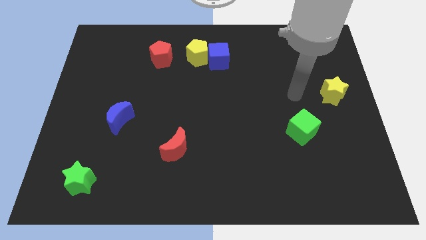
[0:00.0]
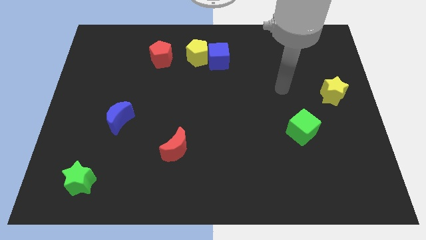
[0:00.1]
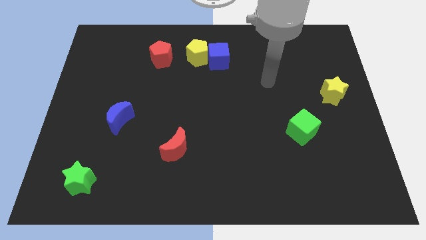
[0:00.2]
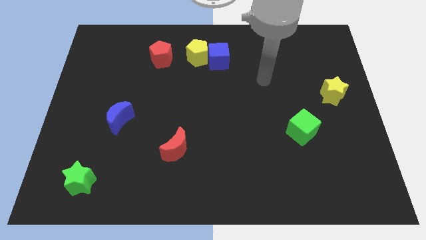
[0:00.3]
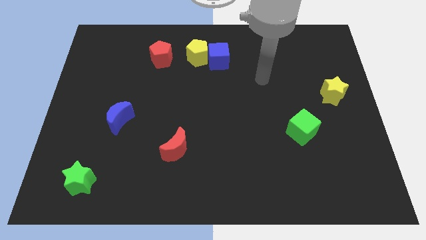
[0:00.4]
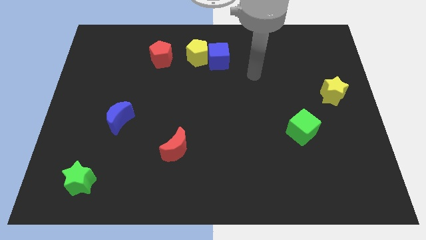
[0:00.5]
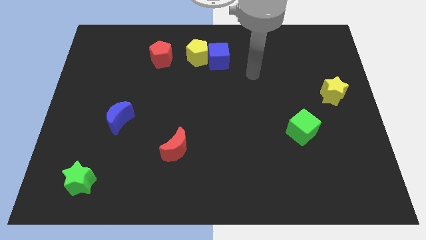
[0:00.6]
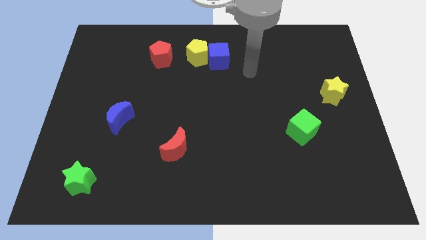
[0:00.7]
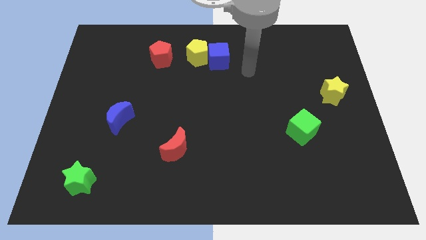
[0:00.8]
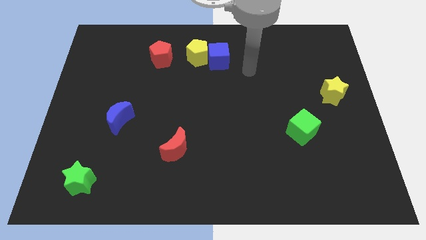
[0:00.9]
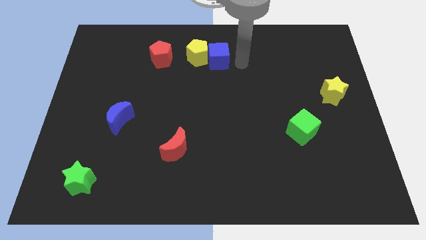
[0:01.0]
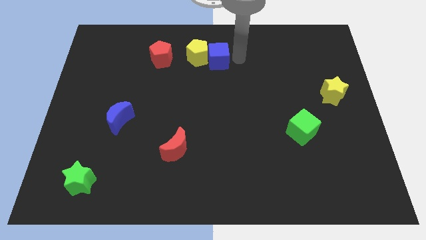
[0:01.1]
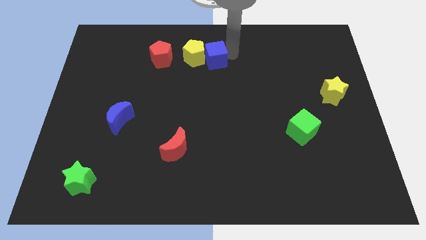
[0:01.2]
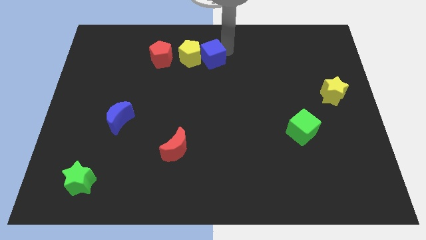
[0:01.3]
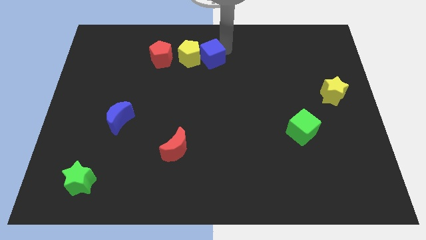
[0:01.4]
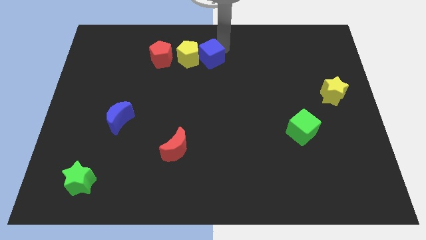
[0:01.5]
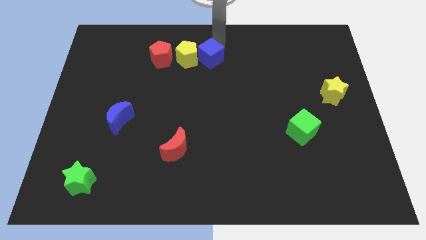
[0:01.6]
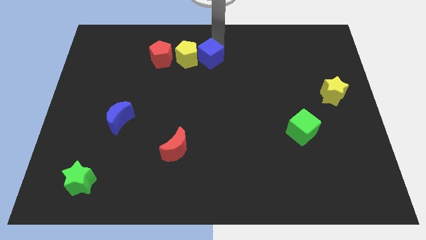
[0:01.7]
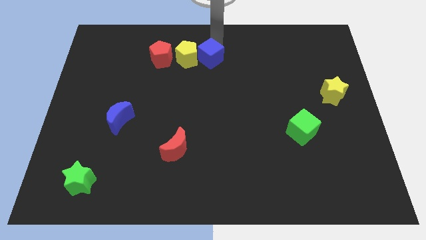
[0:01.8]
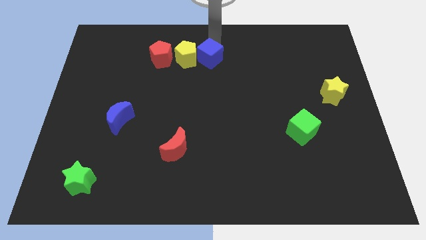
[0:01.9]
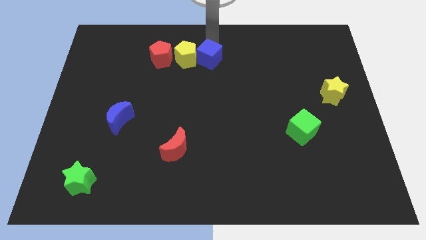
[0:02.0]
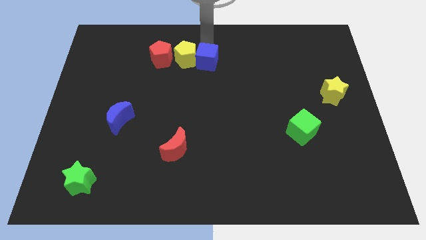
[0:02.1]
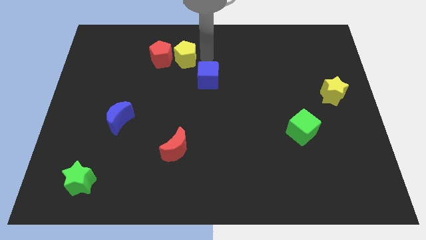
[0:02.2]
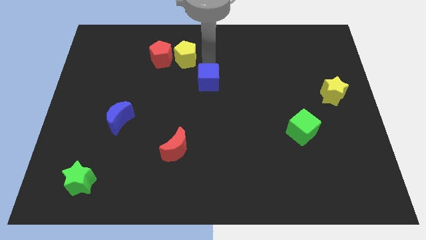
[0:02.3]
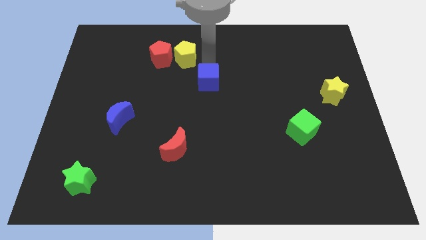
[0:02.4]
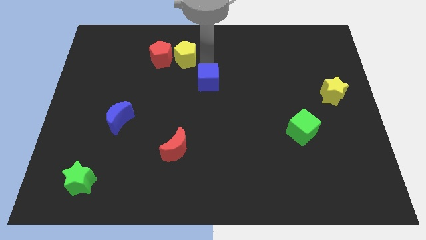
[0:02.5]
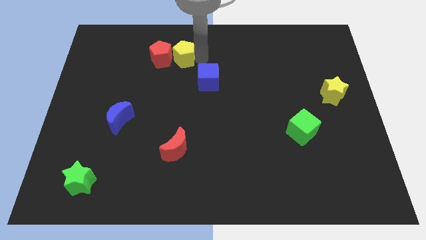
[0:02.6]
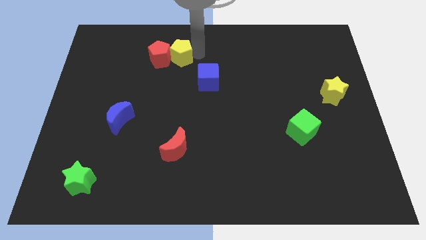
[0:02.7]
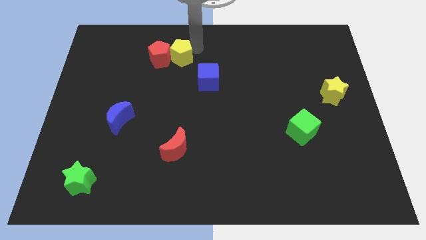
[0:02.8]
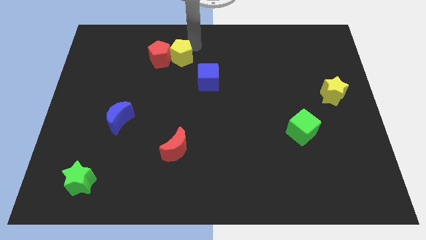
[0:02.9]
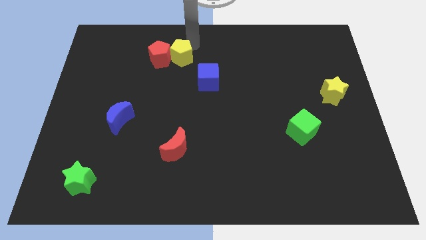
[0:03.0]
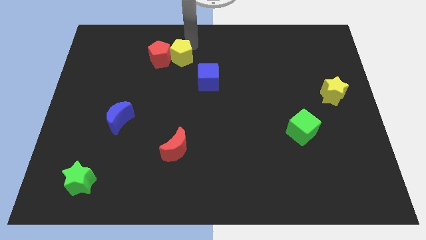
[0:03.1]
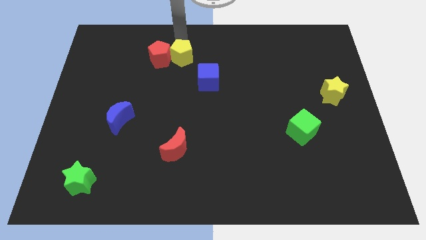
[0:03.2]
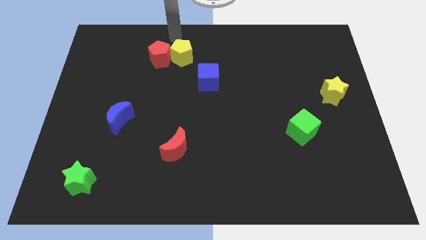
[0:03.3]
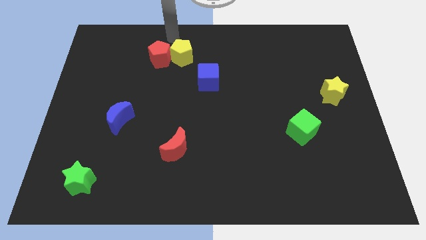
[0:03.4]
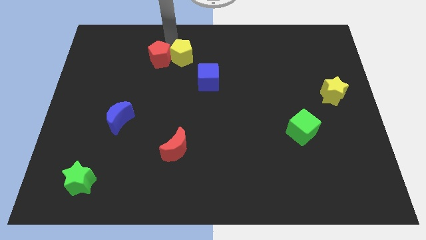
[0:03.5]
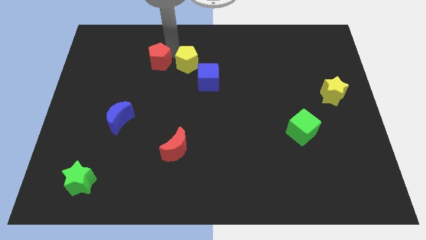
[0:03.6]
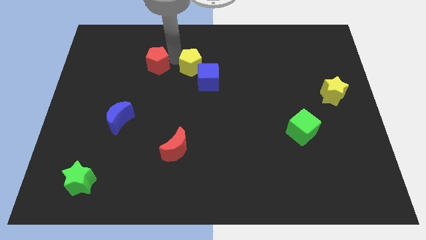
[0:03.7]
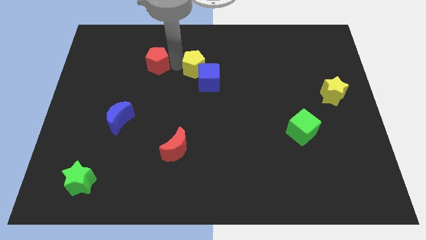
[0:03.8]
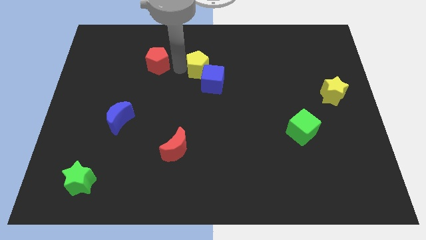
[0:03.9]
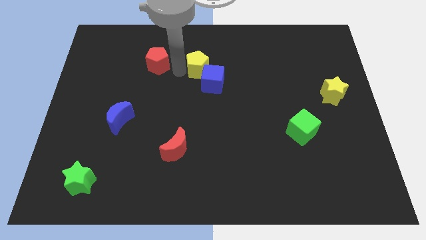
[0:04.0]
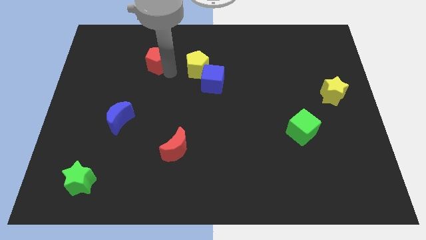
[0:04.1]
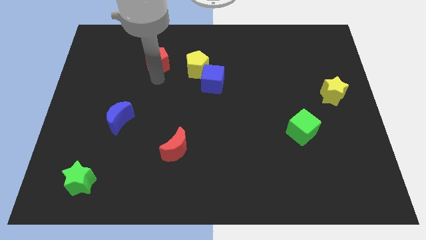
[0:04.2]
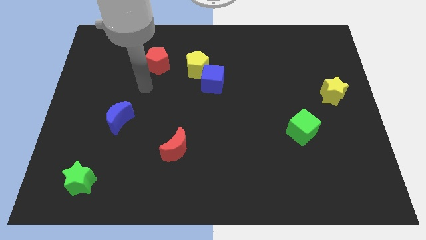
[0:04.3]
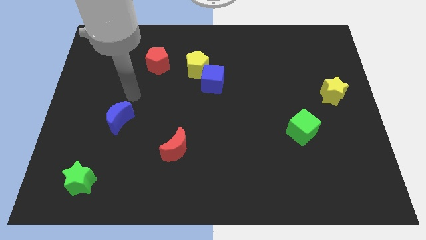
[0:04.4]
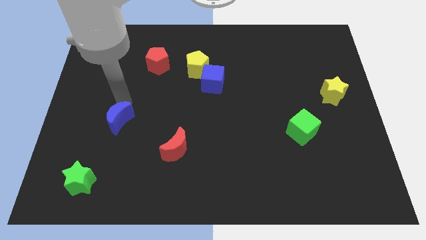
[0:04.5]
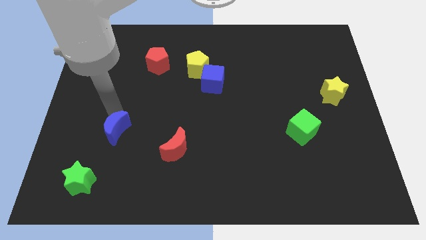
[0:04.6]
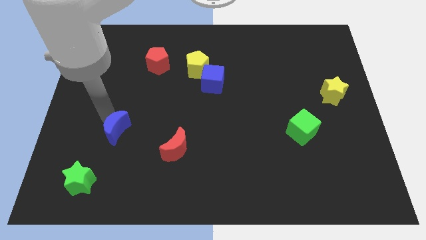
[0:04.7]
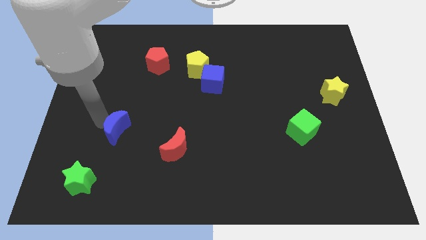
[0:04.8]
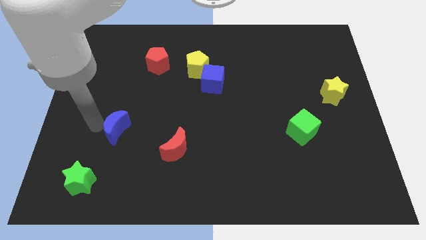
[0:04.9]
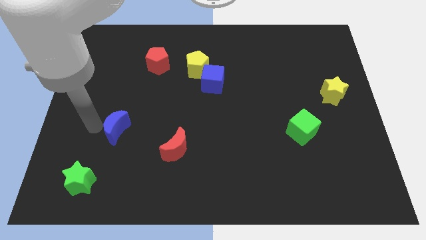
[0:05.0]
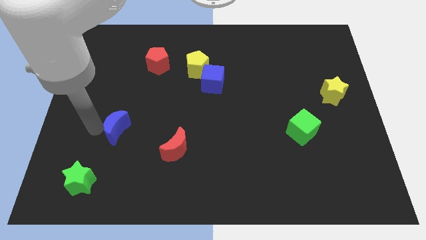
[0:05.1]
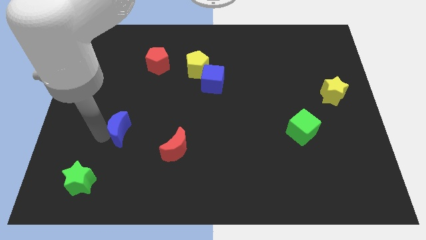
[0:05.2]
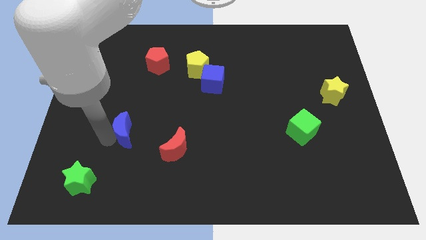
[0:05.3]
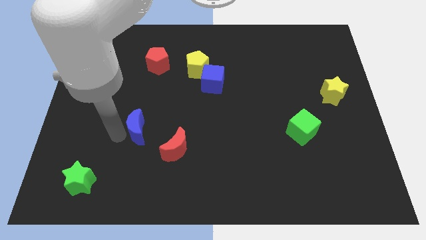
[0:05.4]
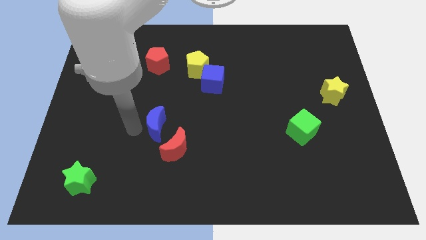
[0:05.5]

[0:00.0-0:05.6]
move the blue cube to right of yellow pentagon

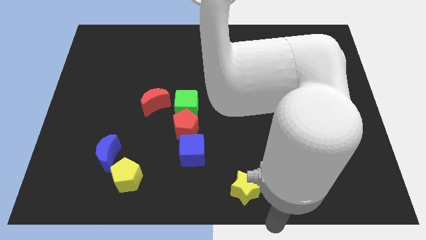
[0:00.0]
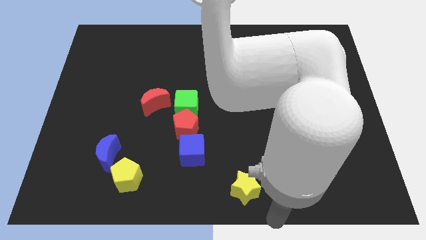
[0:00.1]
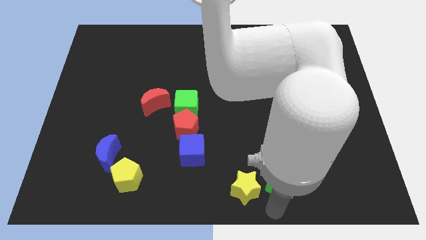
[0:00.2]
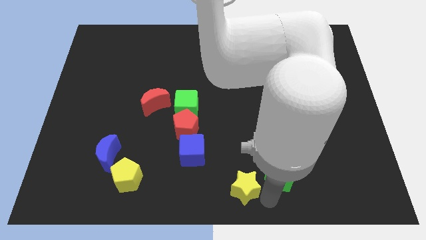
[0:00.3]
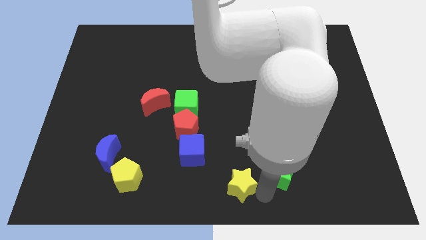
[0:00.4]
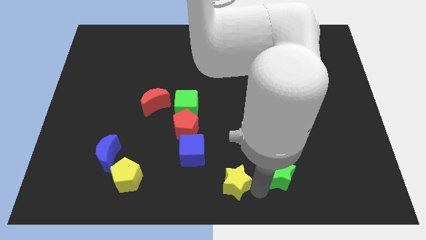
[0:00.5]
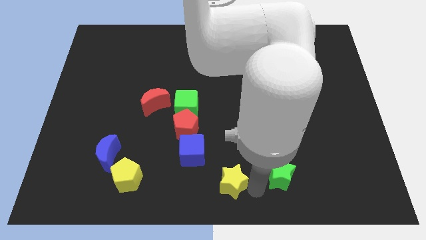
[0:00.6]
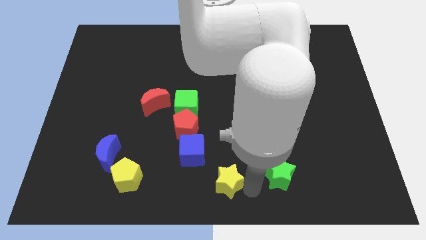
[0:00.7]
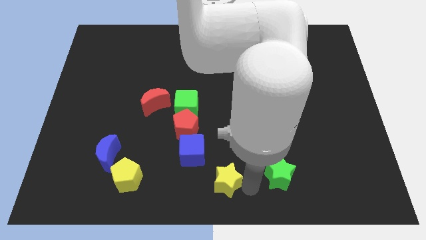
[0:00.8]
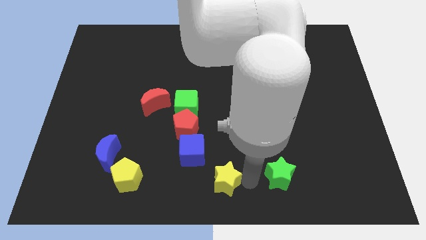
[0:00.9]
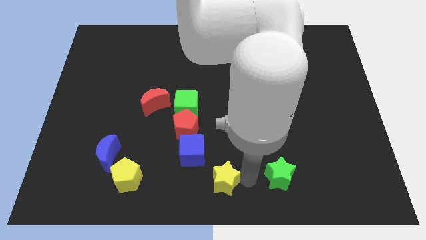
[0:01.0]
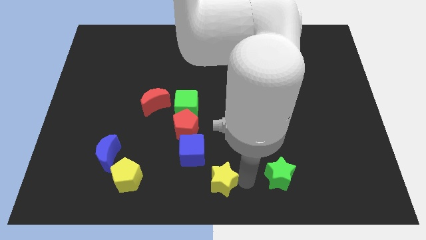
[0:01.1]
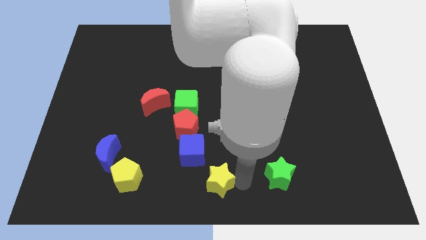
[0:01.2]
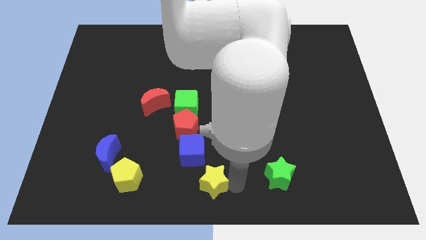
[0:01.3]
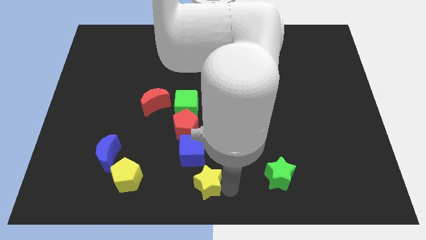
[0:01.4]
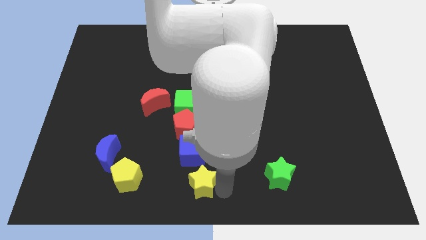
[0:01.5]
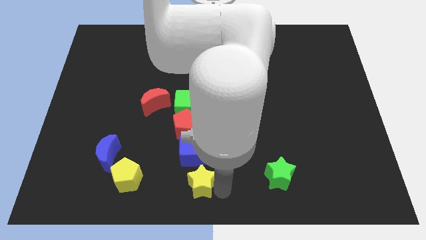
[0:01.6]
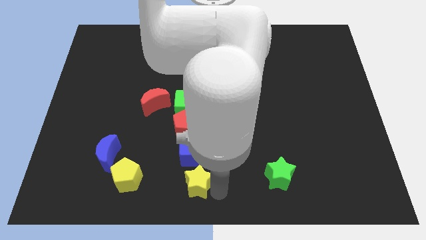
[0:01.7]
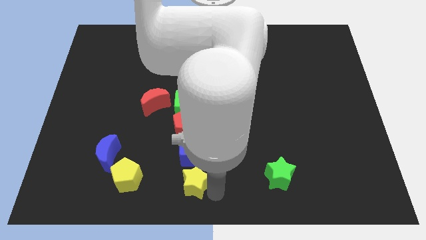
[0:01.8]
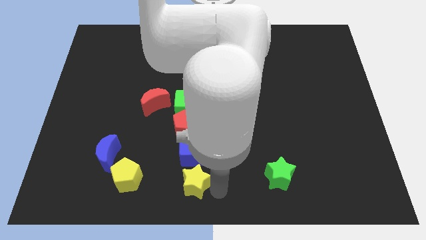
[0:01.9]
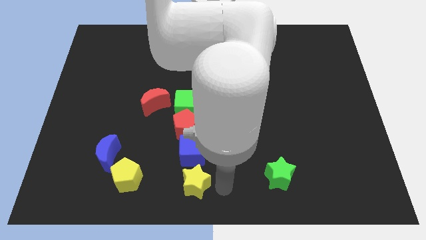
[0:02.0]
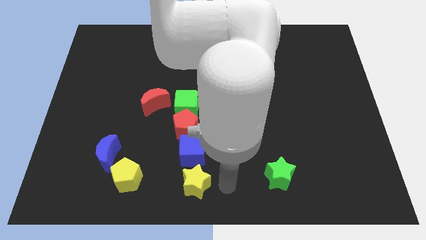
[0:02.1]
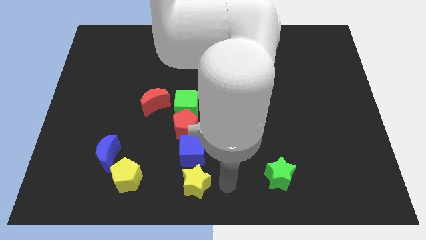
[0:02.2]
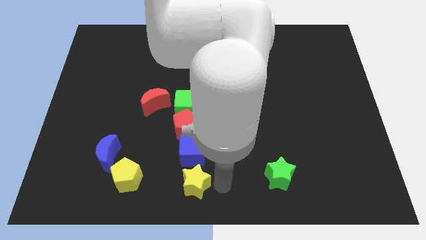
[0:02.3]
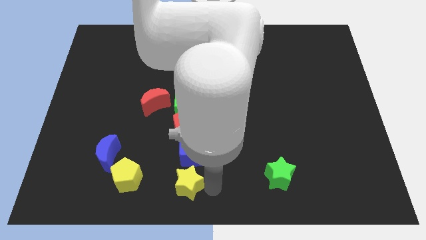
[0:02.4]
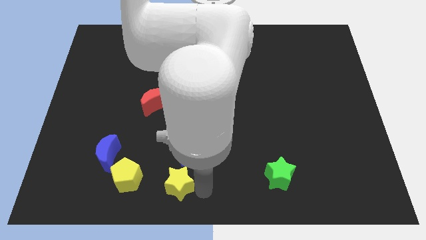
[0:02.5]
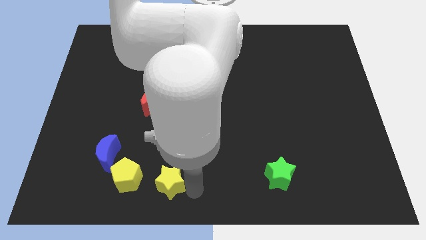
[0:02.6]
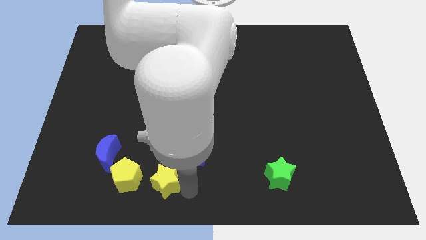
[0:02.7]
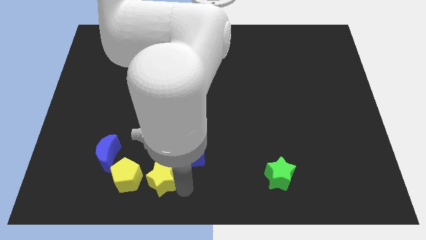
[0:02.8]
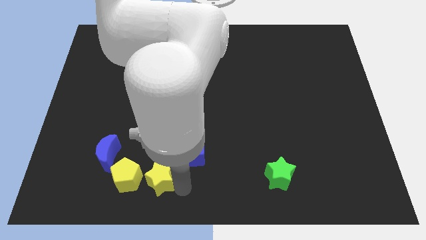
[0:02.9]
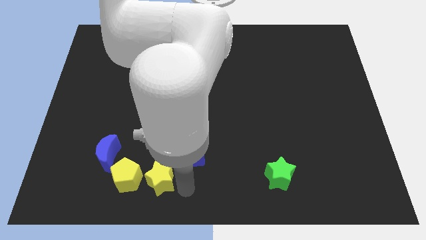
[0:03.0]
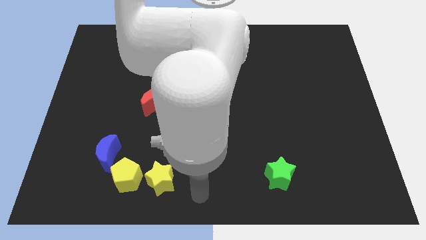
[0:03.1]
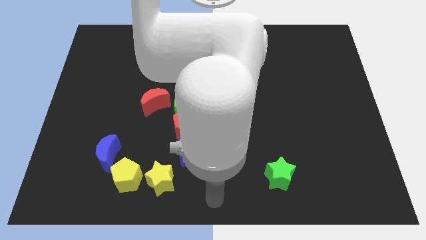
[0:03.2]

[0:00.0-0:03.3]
push yellow star towards yellow pentagon

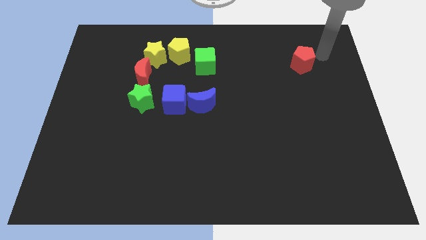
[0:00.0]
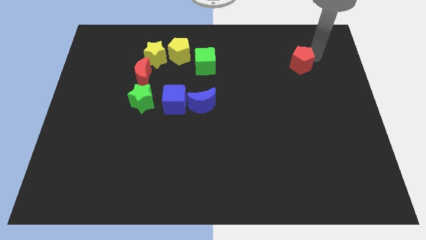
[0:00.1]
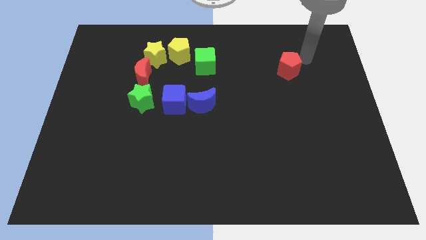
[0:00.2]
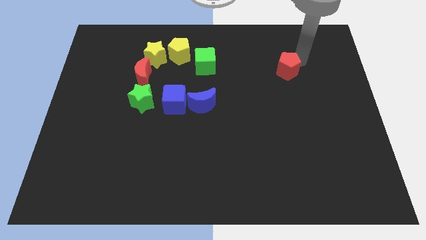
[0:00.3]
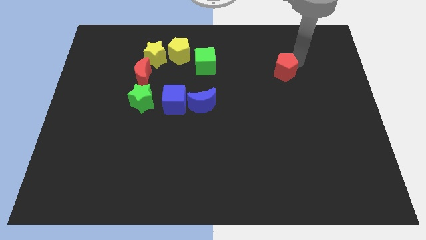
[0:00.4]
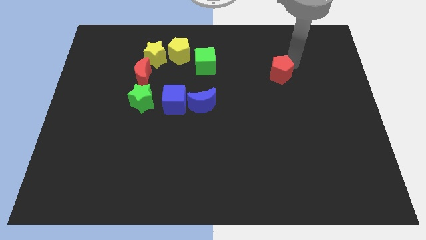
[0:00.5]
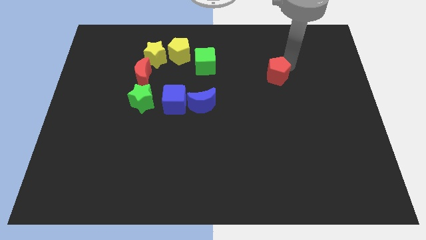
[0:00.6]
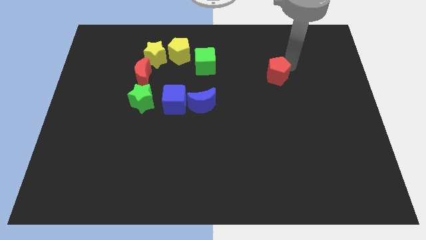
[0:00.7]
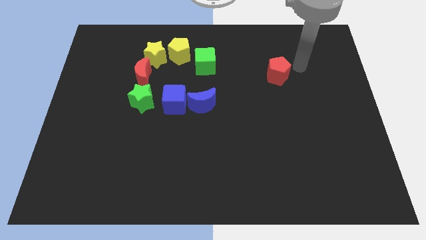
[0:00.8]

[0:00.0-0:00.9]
slightly move the red pentagon down and to the left
